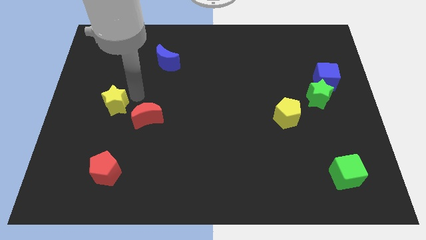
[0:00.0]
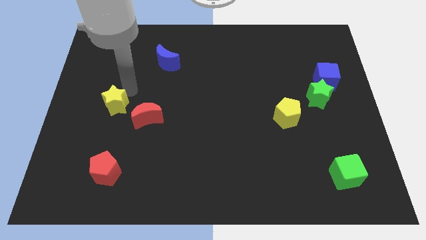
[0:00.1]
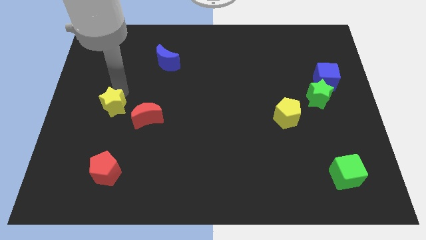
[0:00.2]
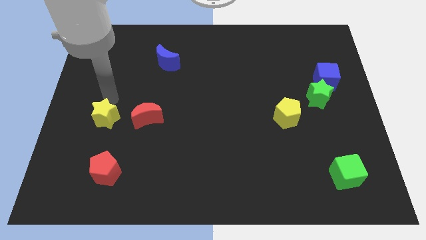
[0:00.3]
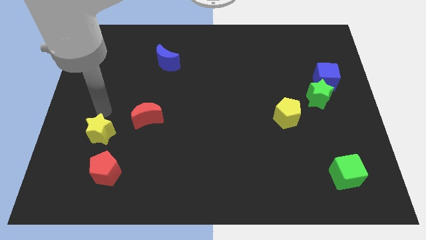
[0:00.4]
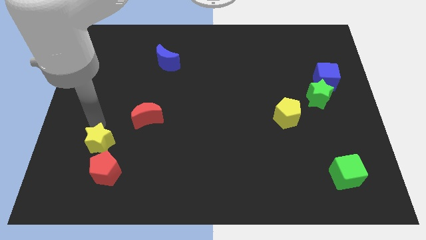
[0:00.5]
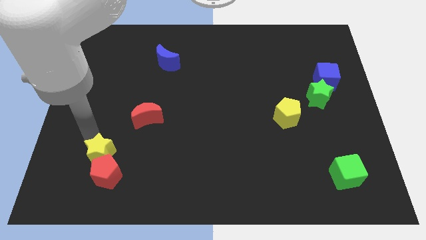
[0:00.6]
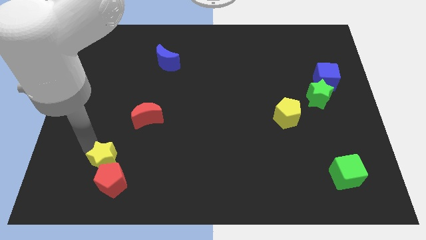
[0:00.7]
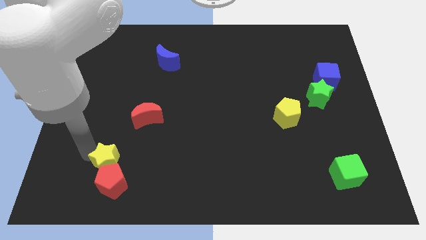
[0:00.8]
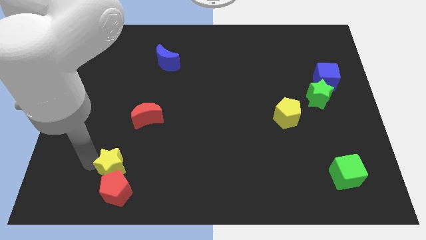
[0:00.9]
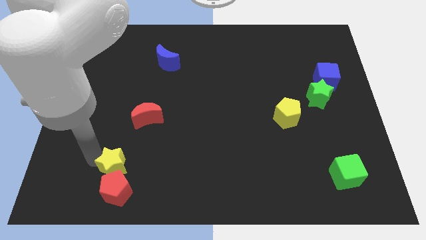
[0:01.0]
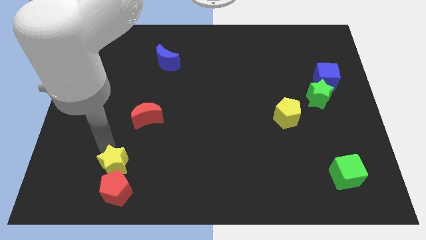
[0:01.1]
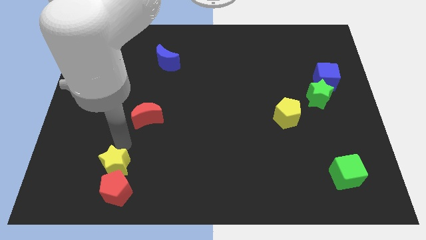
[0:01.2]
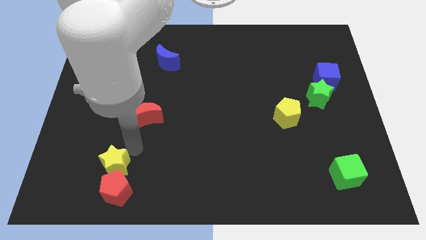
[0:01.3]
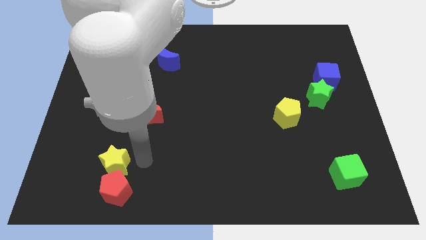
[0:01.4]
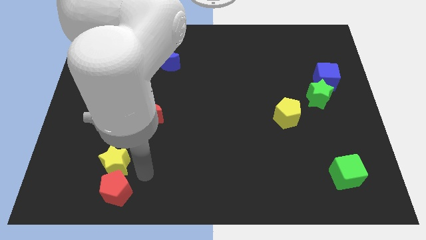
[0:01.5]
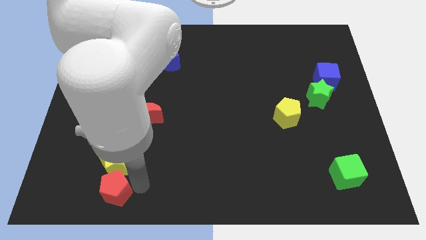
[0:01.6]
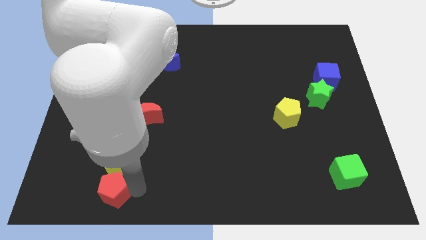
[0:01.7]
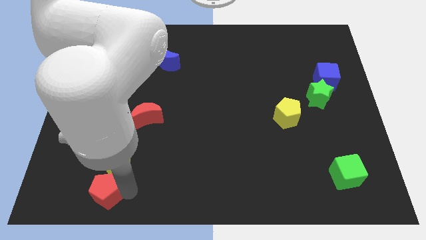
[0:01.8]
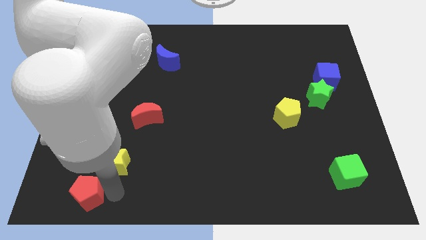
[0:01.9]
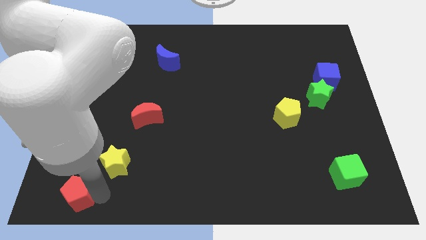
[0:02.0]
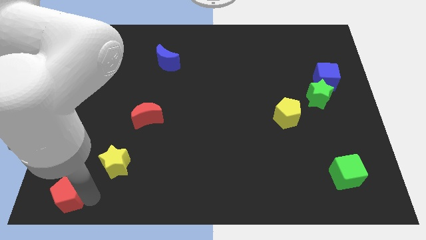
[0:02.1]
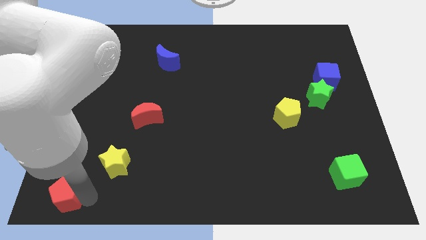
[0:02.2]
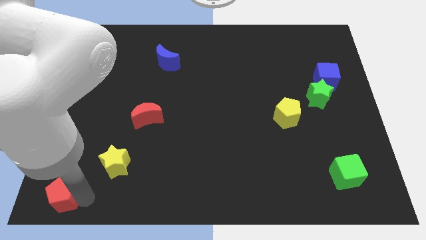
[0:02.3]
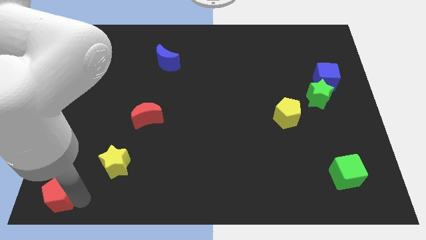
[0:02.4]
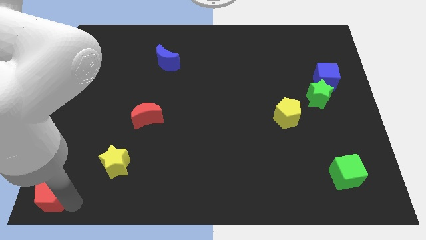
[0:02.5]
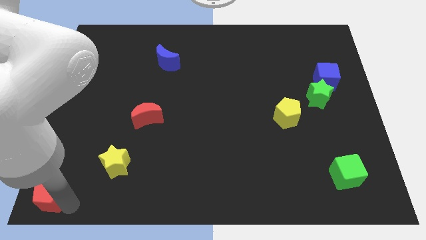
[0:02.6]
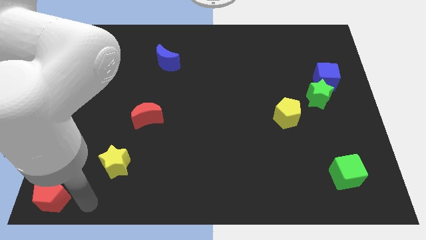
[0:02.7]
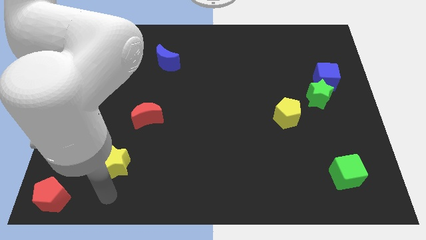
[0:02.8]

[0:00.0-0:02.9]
place red pentagon towards left bottom corner

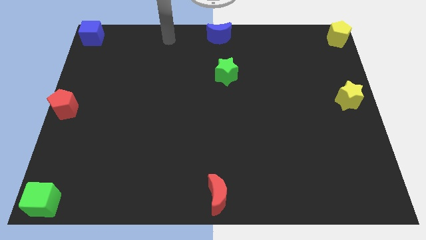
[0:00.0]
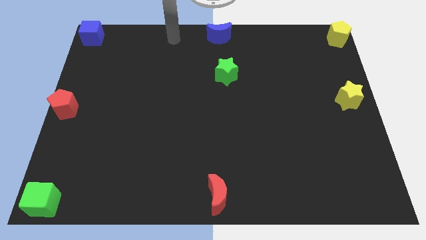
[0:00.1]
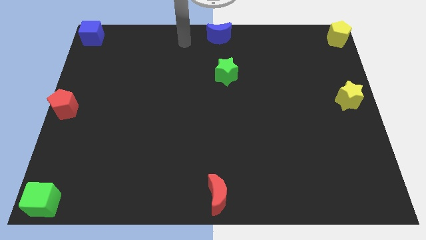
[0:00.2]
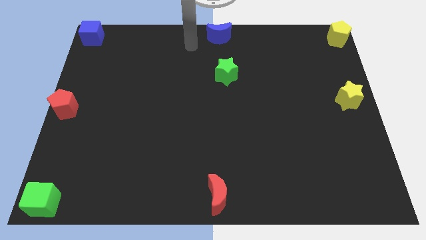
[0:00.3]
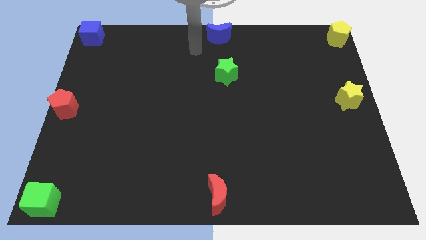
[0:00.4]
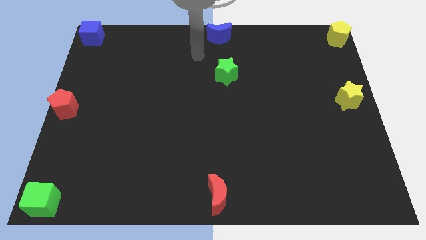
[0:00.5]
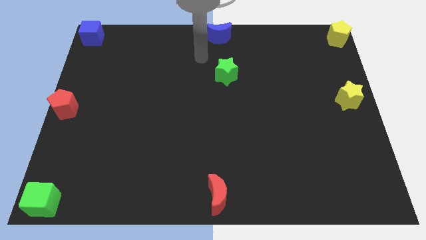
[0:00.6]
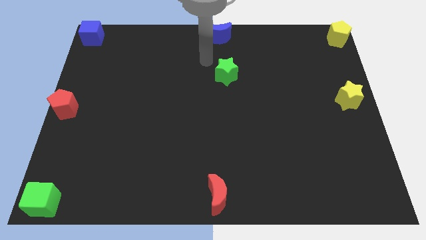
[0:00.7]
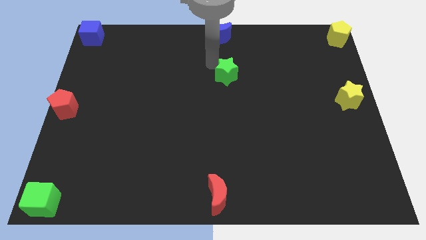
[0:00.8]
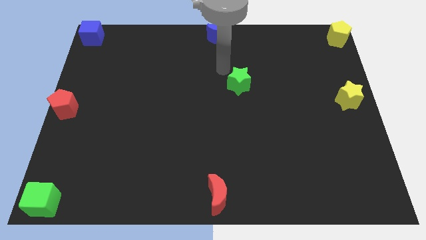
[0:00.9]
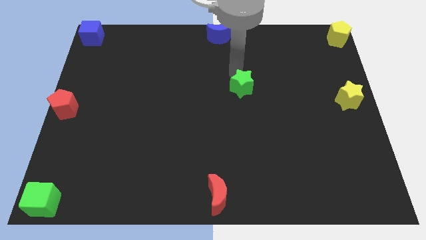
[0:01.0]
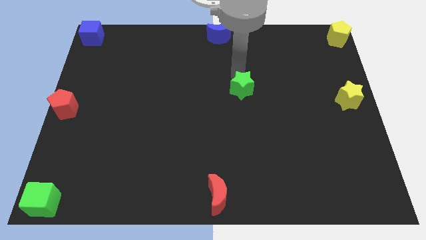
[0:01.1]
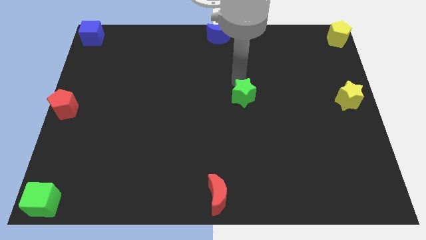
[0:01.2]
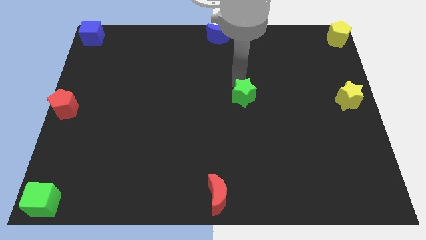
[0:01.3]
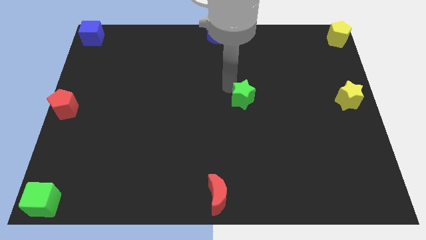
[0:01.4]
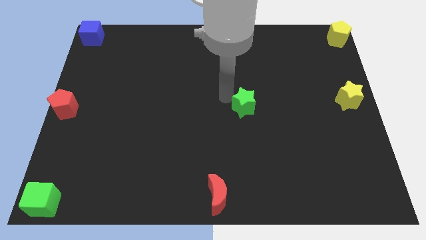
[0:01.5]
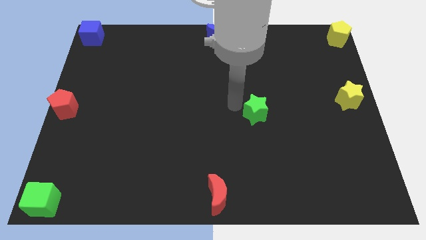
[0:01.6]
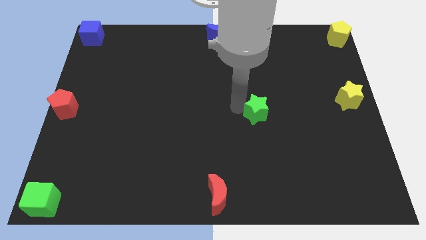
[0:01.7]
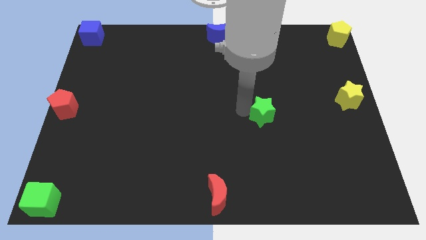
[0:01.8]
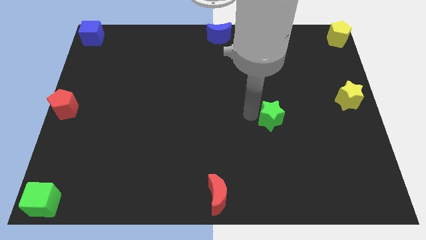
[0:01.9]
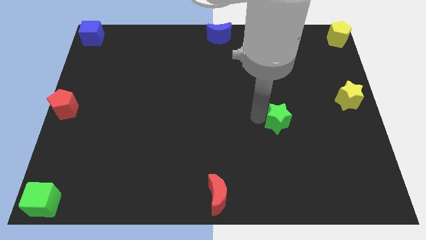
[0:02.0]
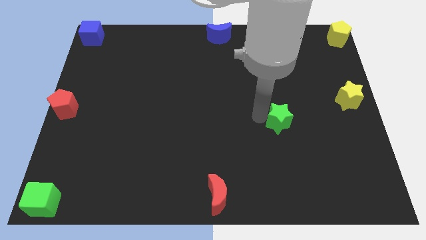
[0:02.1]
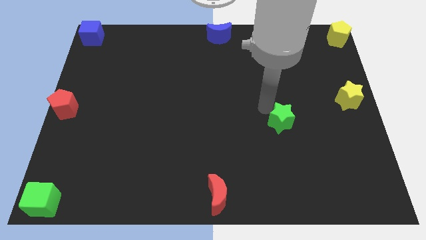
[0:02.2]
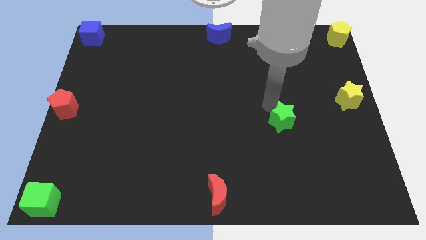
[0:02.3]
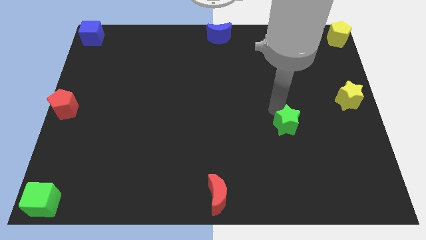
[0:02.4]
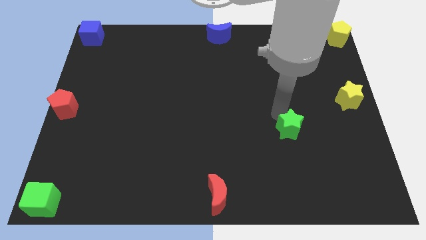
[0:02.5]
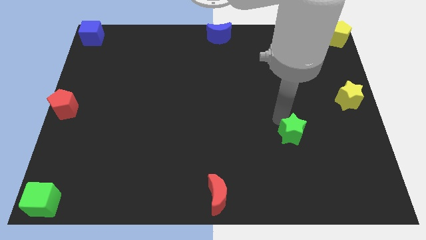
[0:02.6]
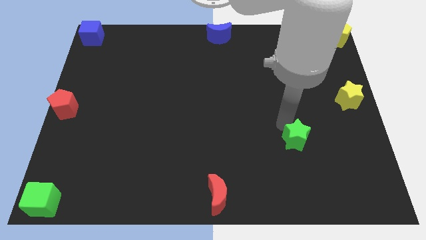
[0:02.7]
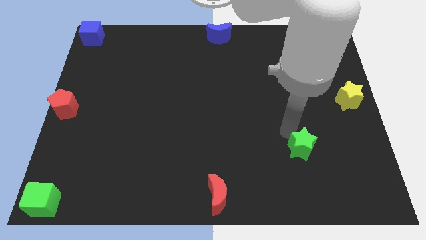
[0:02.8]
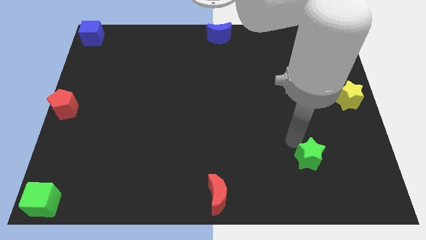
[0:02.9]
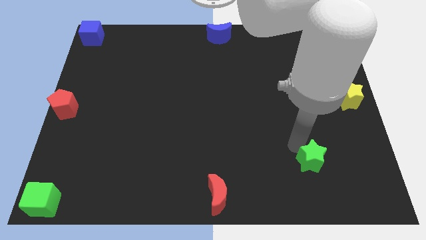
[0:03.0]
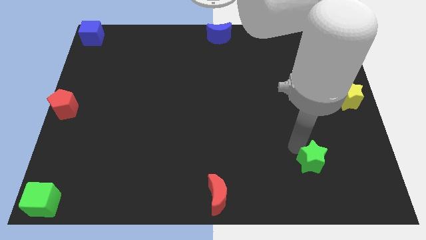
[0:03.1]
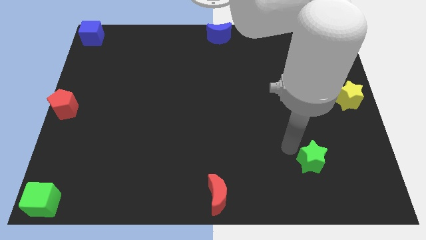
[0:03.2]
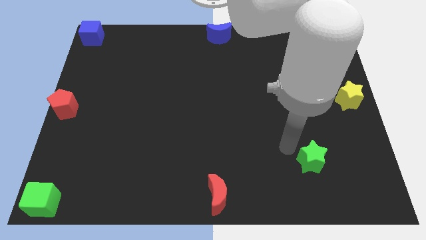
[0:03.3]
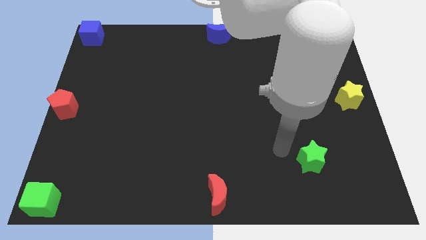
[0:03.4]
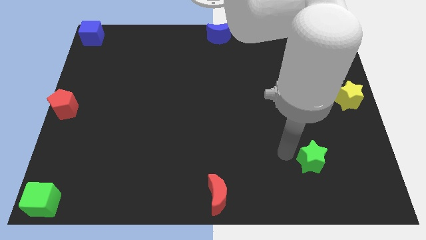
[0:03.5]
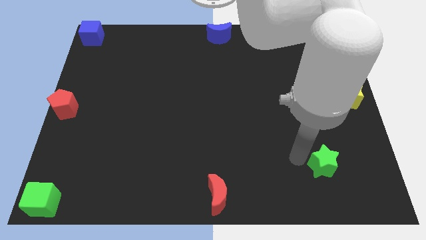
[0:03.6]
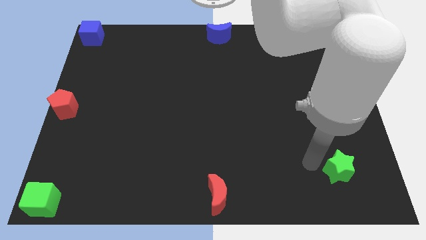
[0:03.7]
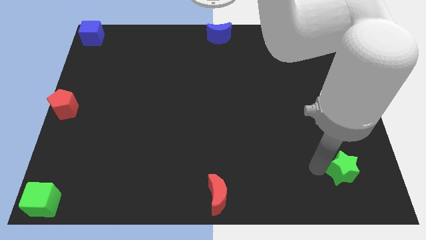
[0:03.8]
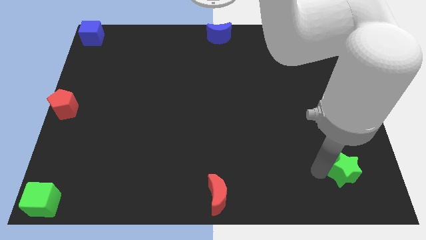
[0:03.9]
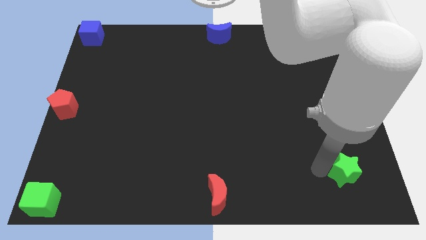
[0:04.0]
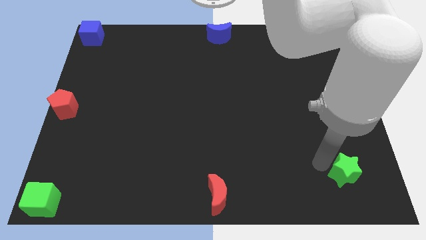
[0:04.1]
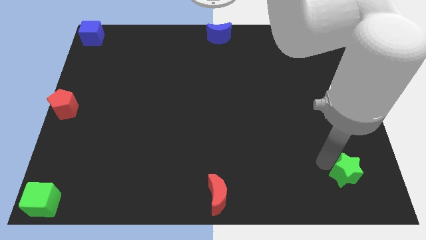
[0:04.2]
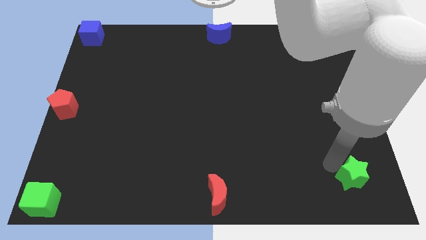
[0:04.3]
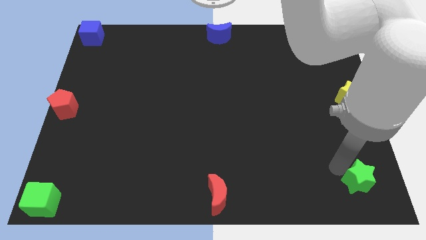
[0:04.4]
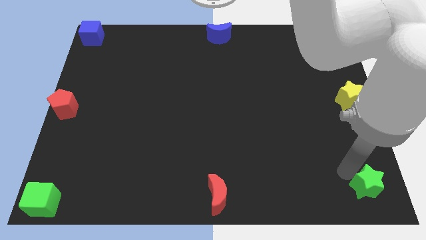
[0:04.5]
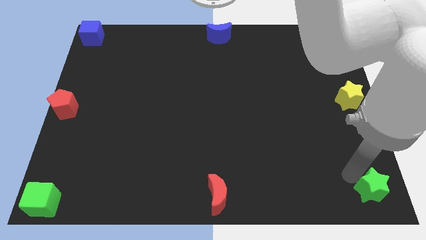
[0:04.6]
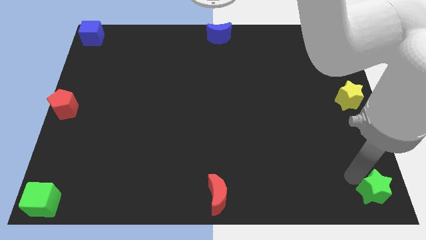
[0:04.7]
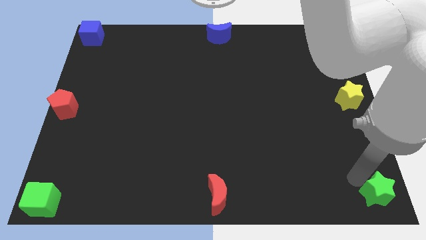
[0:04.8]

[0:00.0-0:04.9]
move the green star towards the bottom right side of the board

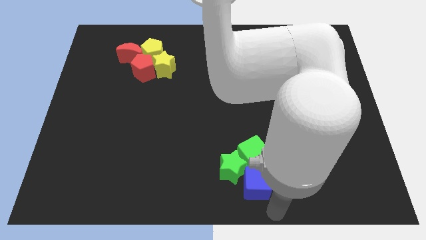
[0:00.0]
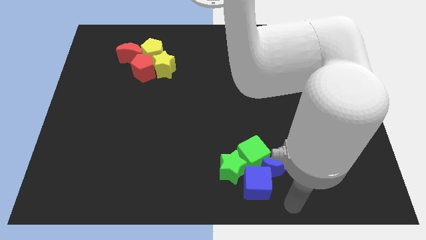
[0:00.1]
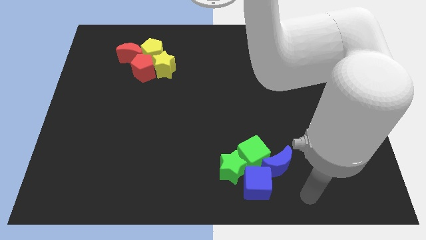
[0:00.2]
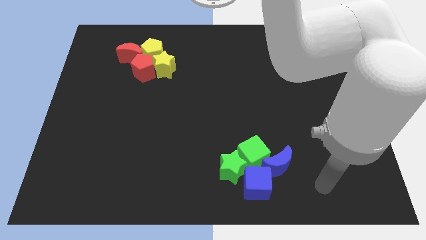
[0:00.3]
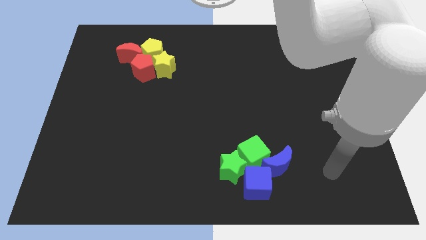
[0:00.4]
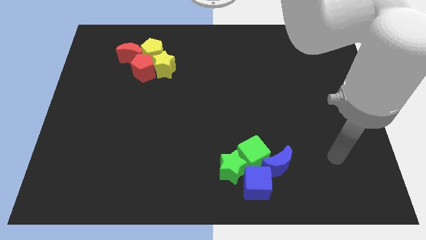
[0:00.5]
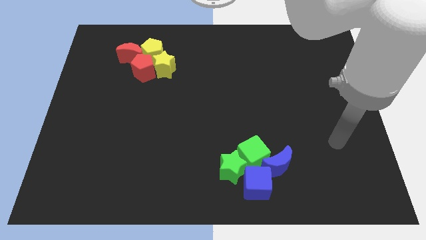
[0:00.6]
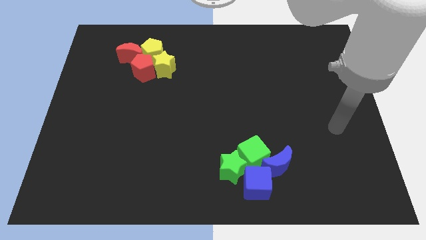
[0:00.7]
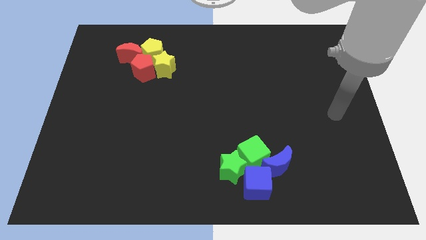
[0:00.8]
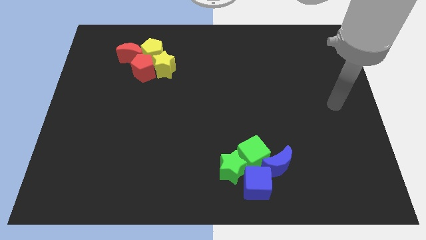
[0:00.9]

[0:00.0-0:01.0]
move your hand away from the blue cube
